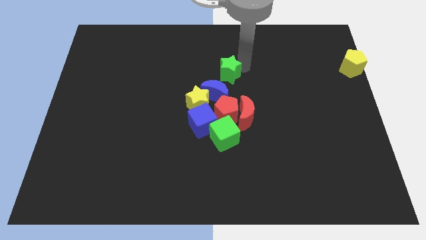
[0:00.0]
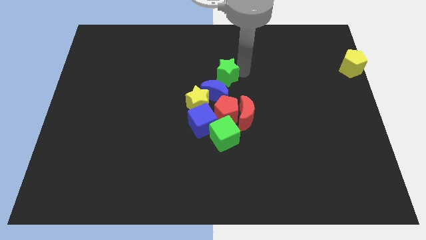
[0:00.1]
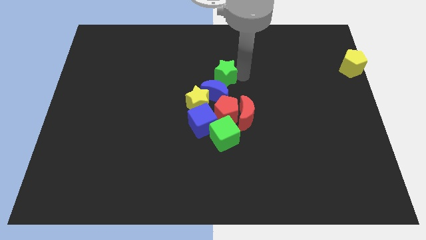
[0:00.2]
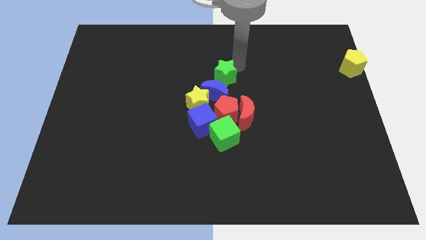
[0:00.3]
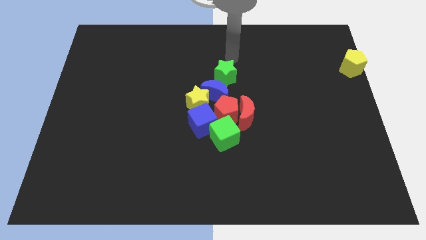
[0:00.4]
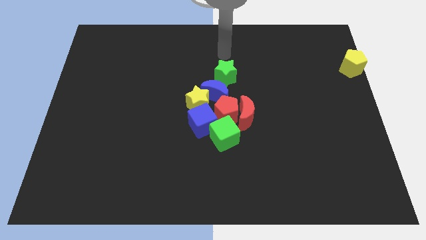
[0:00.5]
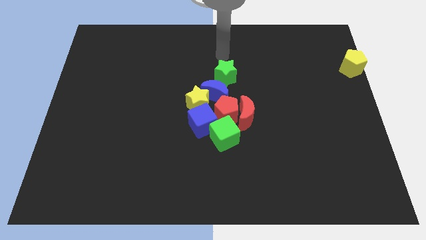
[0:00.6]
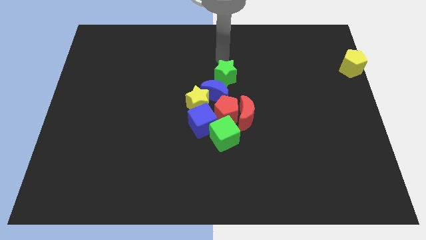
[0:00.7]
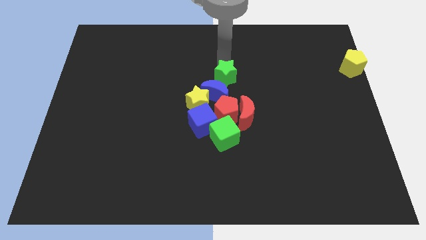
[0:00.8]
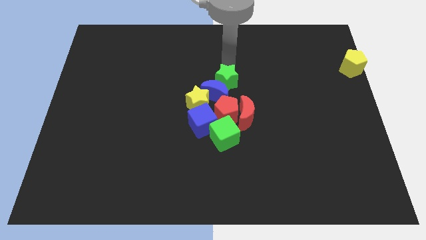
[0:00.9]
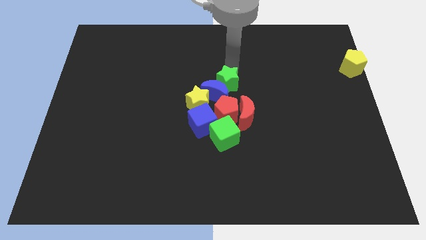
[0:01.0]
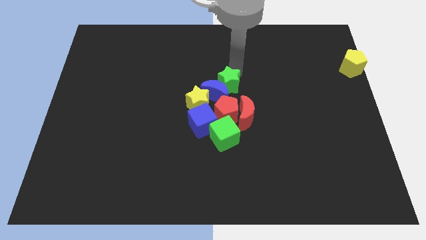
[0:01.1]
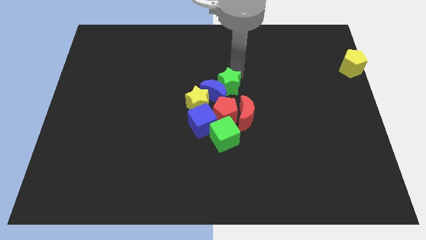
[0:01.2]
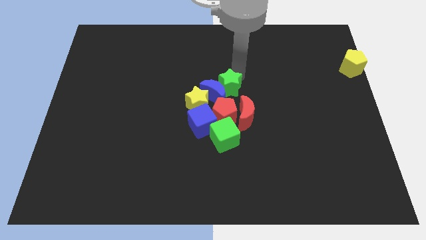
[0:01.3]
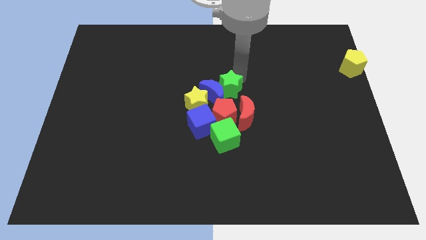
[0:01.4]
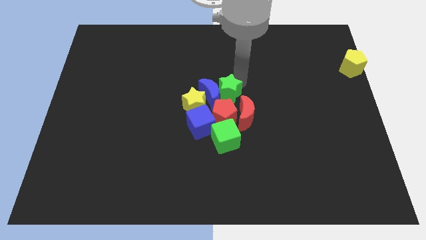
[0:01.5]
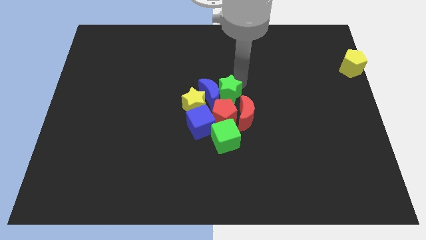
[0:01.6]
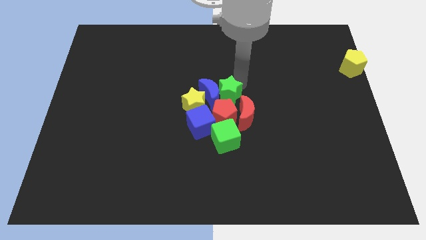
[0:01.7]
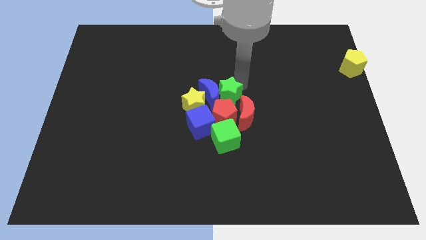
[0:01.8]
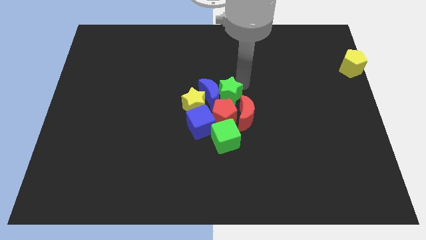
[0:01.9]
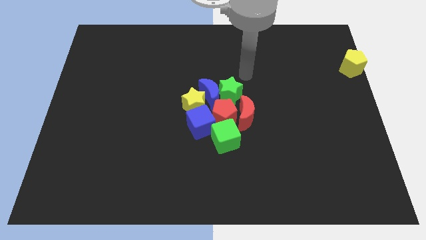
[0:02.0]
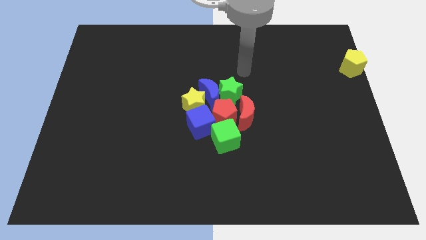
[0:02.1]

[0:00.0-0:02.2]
place the green star right to the blue crescent

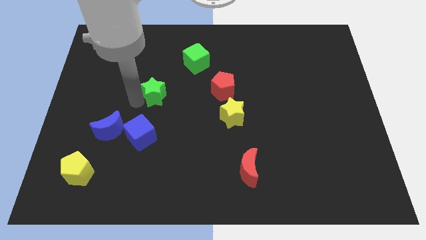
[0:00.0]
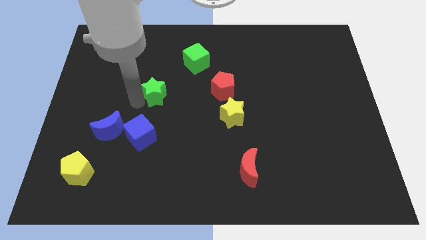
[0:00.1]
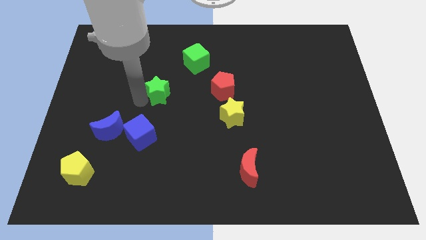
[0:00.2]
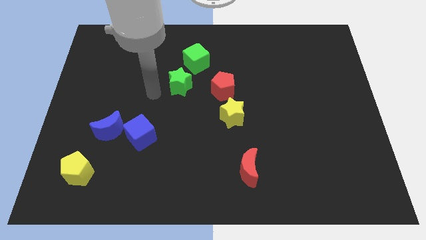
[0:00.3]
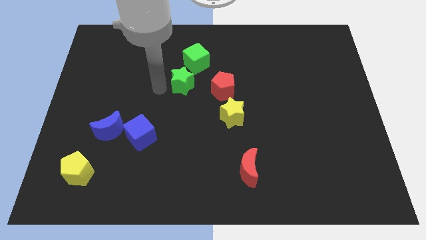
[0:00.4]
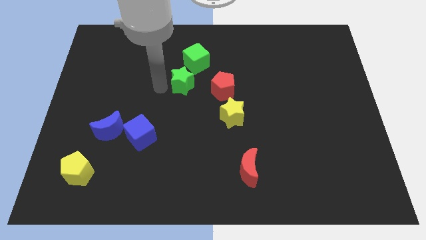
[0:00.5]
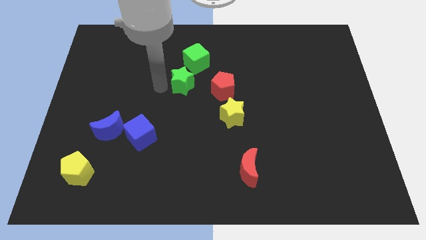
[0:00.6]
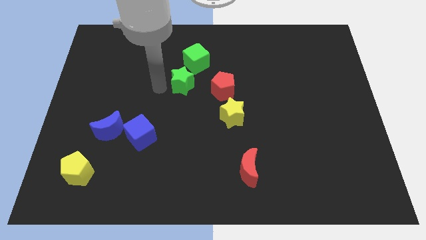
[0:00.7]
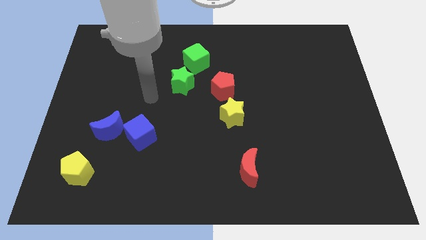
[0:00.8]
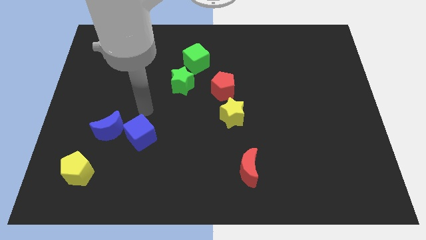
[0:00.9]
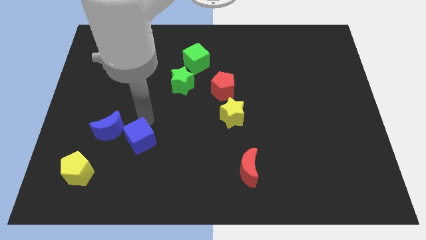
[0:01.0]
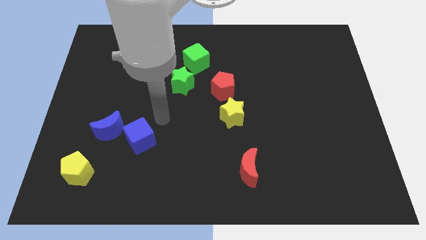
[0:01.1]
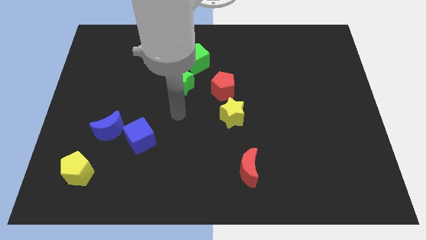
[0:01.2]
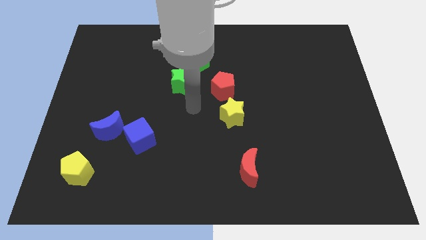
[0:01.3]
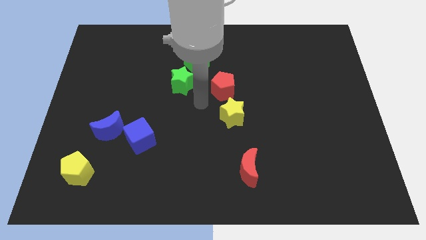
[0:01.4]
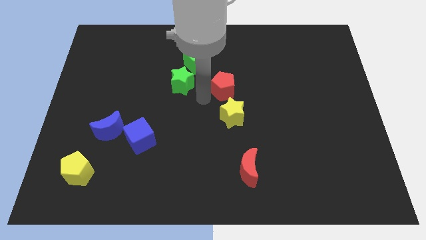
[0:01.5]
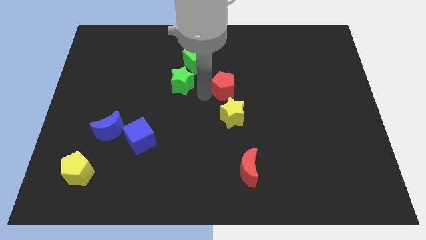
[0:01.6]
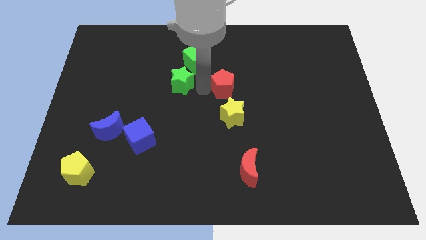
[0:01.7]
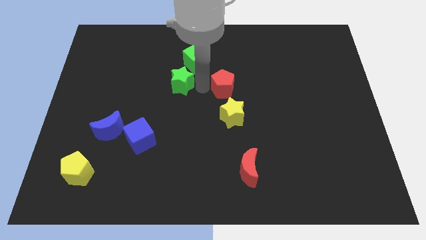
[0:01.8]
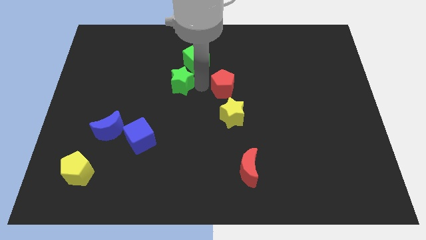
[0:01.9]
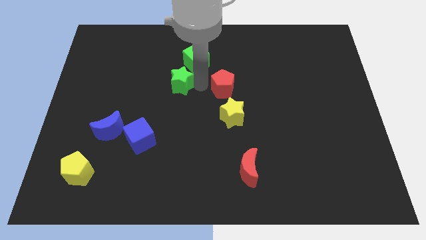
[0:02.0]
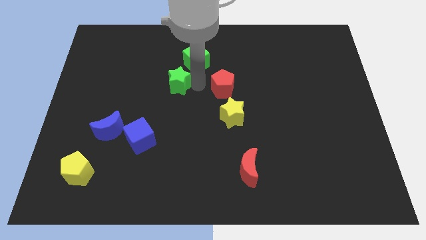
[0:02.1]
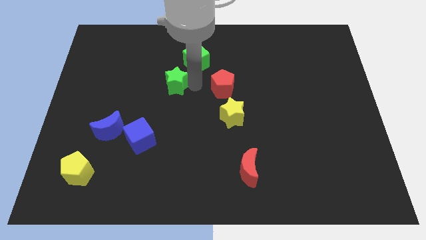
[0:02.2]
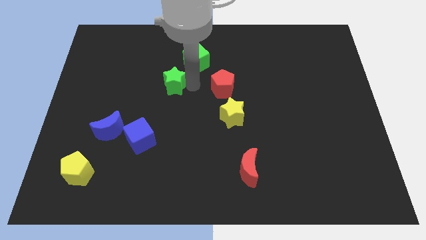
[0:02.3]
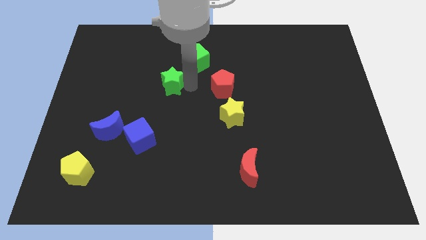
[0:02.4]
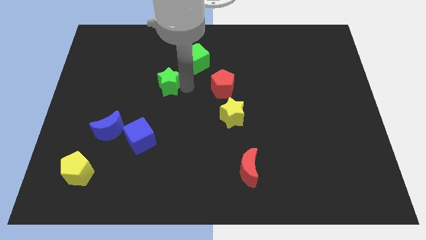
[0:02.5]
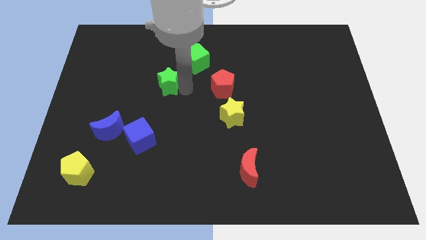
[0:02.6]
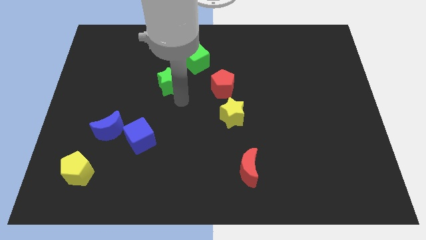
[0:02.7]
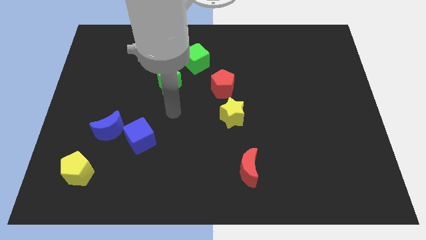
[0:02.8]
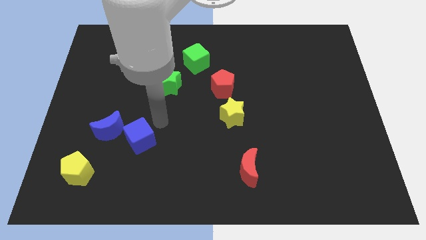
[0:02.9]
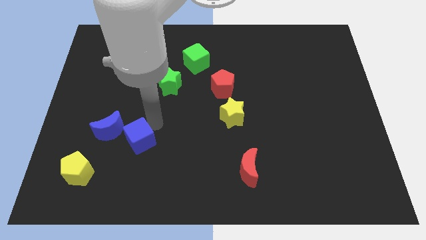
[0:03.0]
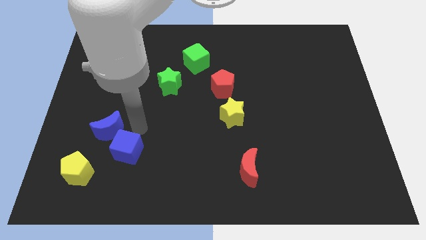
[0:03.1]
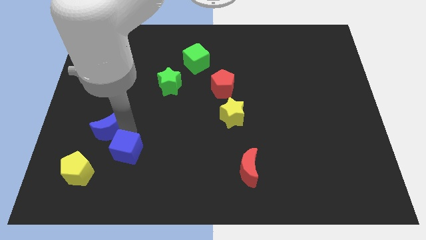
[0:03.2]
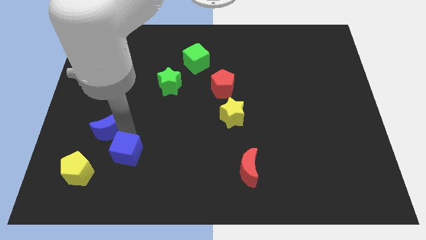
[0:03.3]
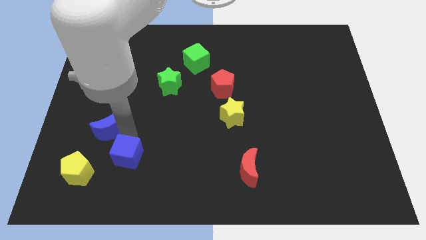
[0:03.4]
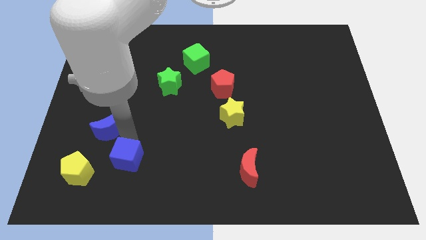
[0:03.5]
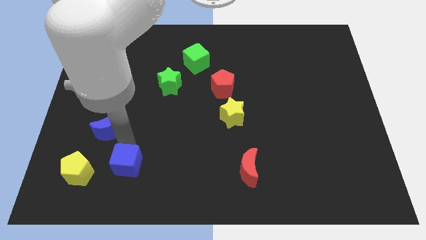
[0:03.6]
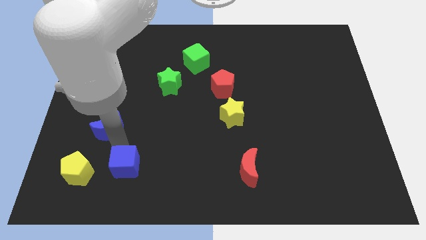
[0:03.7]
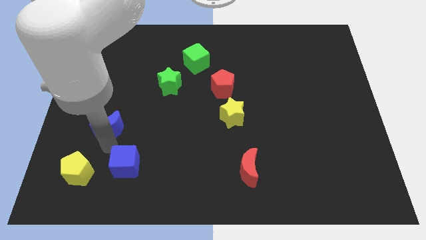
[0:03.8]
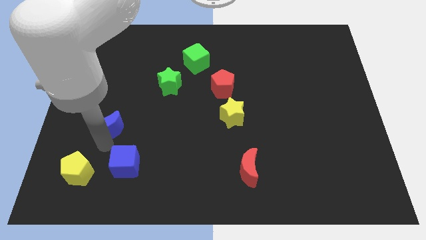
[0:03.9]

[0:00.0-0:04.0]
place blue cube beside yellow pentagon

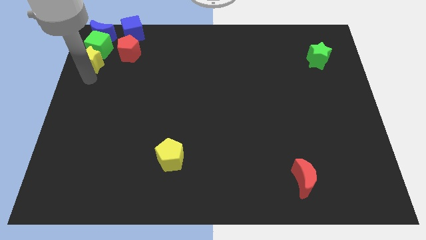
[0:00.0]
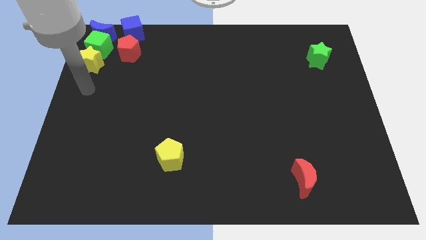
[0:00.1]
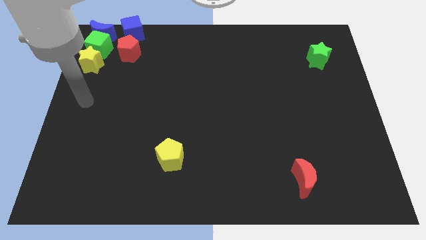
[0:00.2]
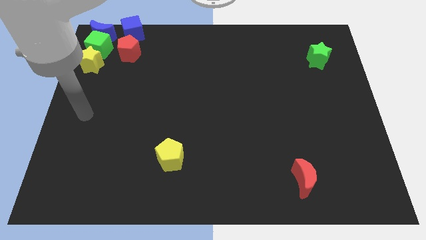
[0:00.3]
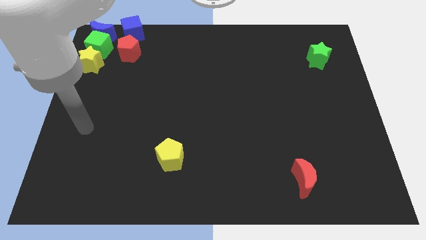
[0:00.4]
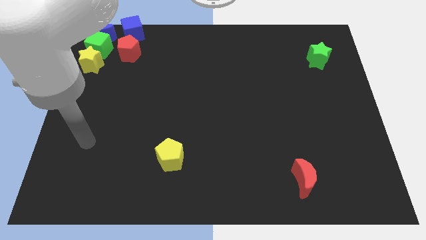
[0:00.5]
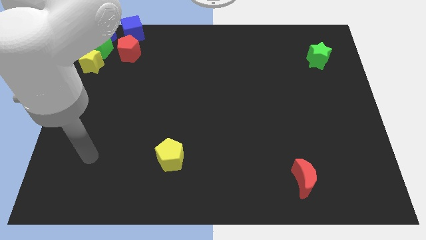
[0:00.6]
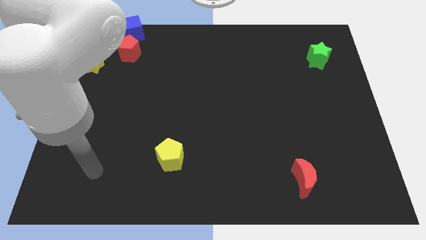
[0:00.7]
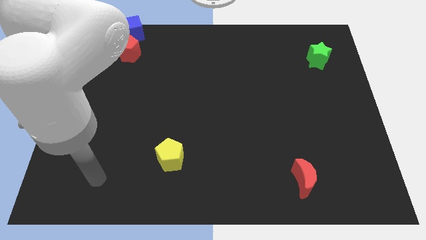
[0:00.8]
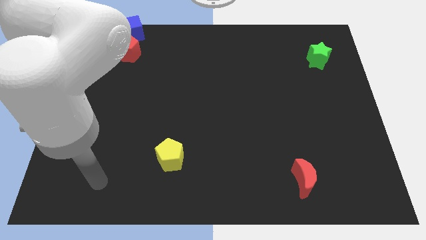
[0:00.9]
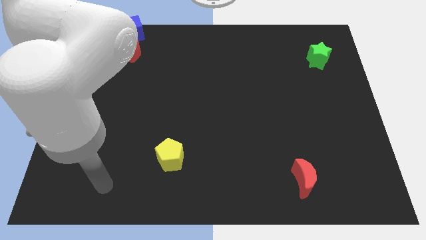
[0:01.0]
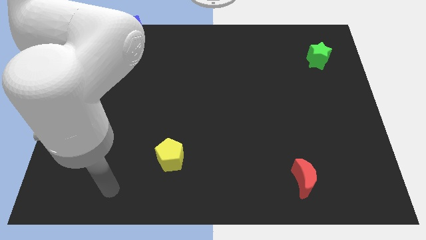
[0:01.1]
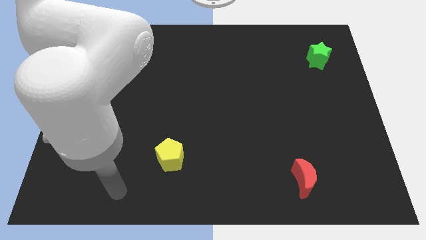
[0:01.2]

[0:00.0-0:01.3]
move your arm away from yellow star

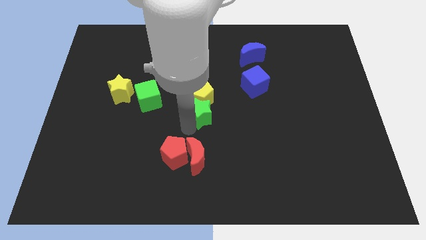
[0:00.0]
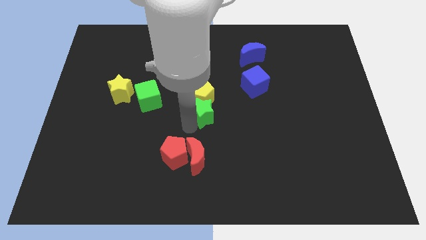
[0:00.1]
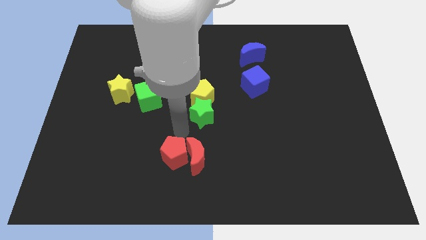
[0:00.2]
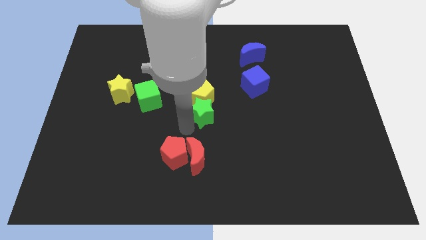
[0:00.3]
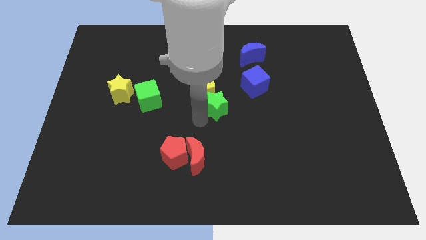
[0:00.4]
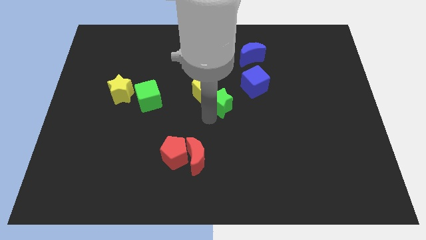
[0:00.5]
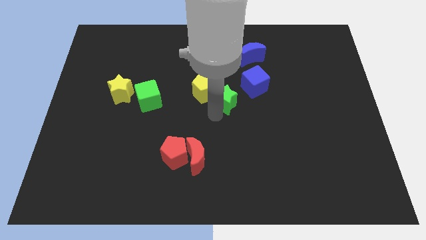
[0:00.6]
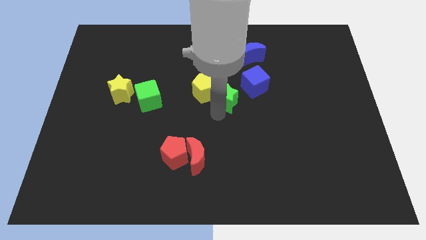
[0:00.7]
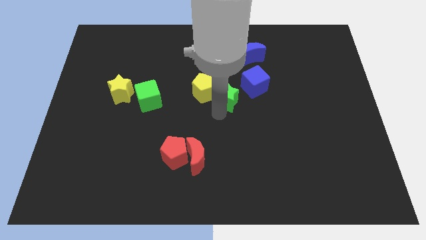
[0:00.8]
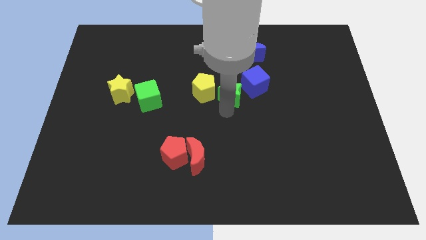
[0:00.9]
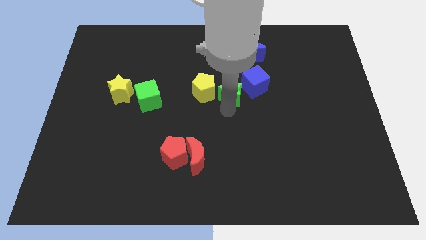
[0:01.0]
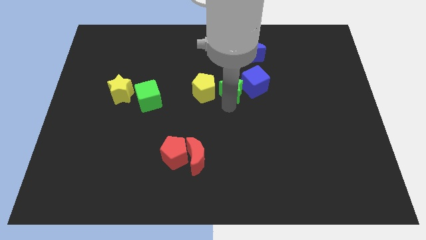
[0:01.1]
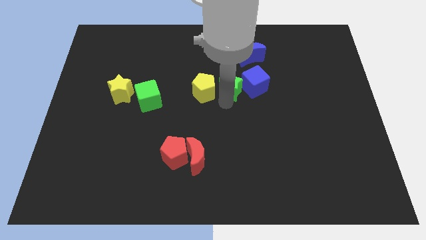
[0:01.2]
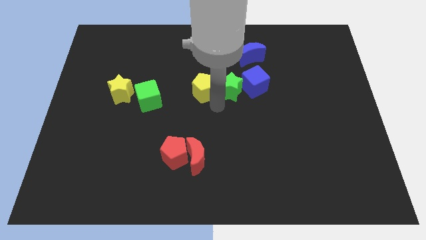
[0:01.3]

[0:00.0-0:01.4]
move the green star in between yellow pentagon and blue cube
